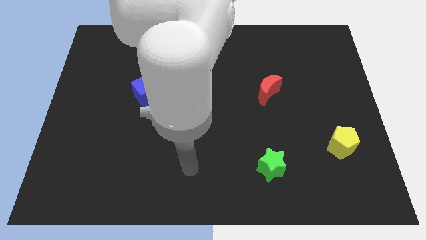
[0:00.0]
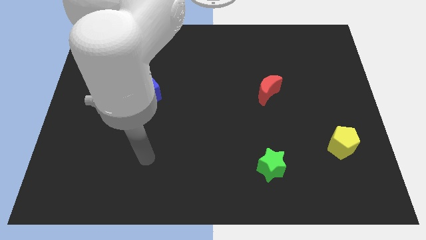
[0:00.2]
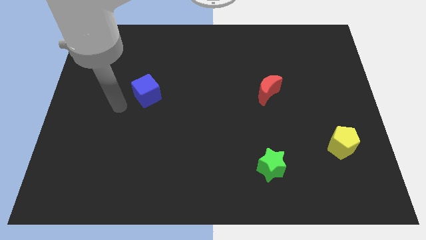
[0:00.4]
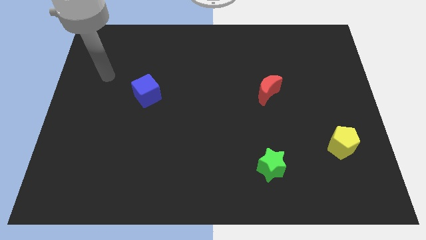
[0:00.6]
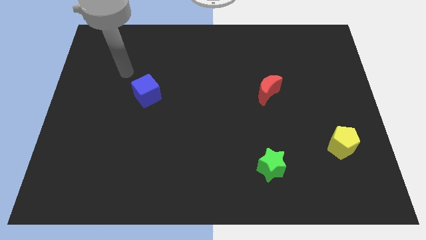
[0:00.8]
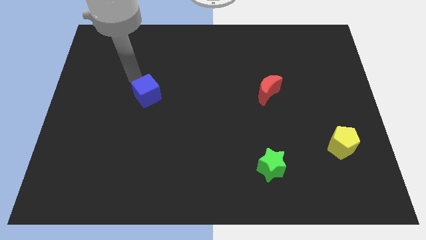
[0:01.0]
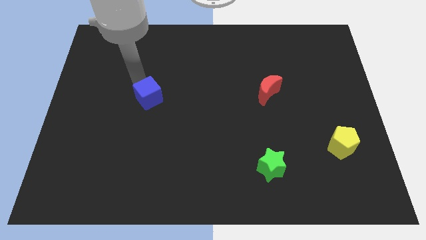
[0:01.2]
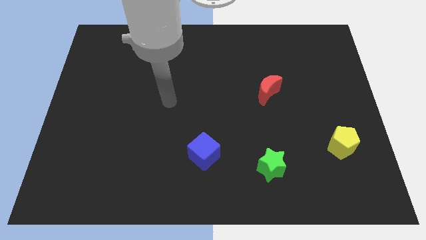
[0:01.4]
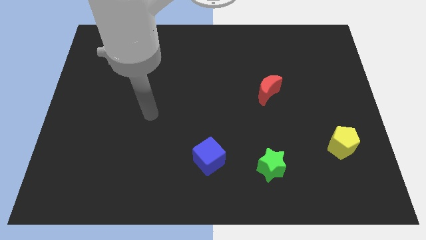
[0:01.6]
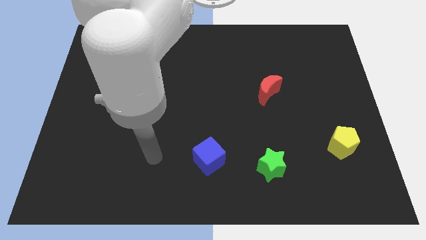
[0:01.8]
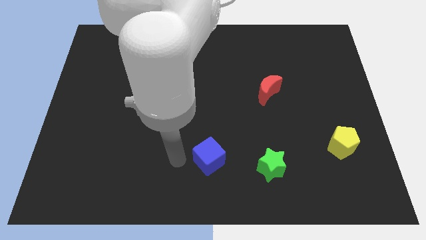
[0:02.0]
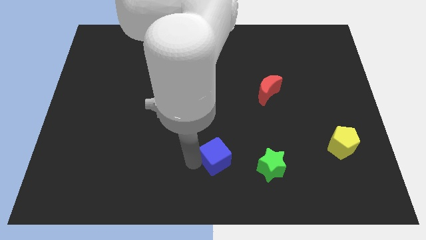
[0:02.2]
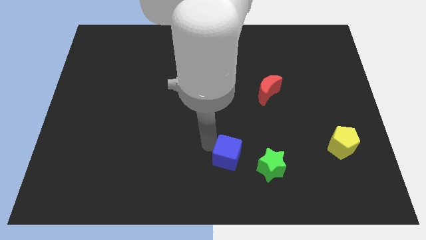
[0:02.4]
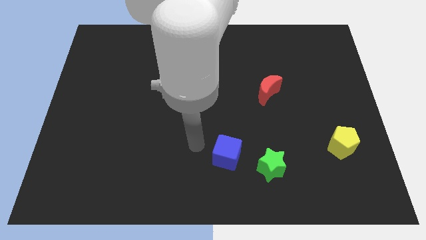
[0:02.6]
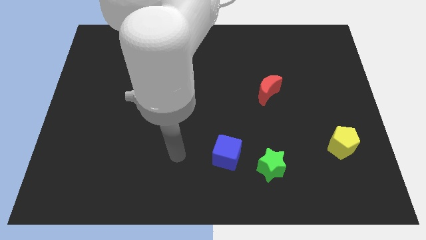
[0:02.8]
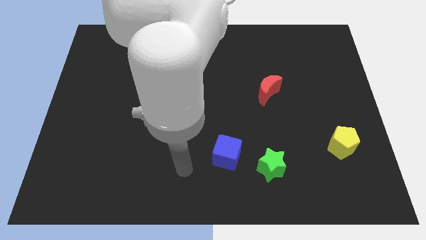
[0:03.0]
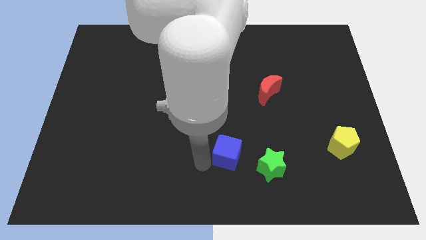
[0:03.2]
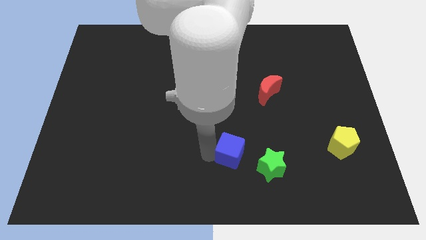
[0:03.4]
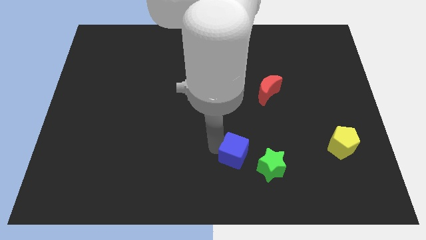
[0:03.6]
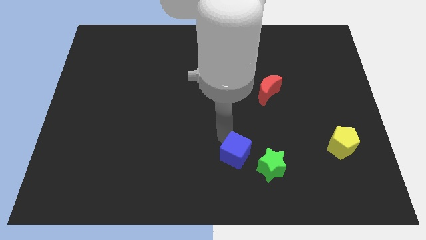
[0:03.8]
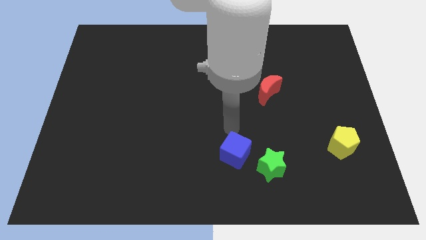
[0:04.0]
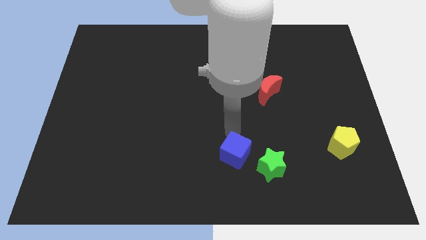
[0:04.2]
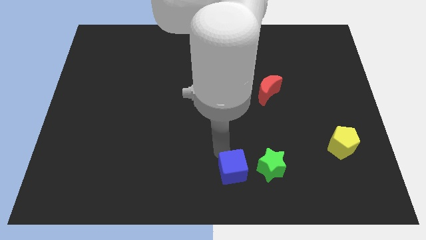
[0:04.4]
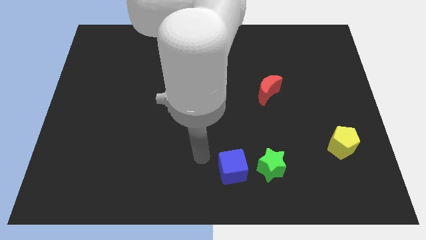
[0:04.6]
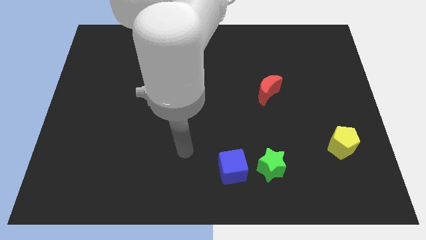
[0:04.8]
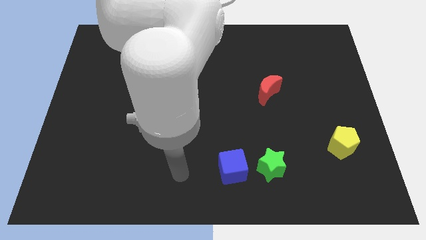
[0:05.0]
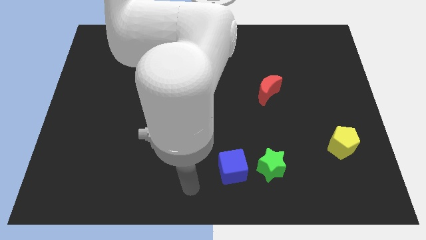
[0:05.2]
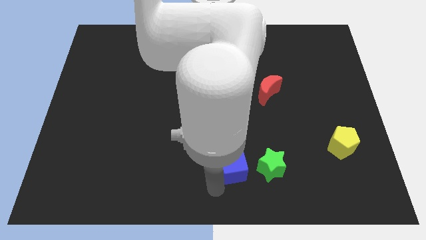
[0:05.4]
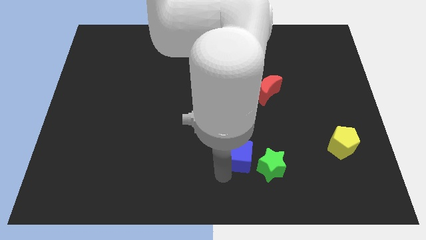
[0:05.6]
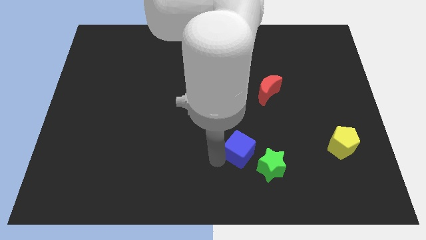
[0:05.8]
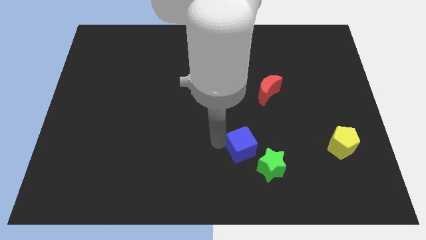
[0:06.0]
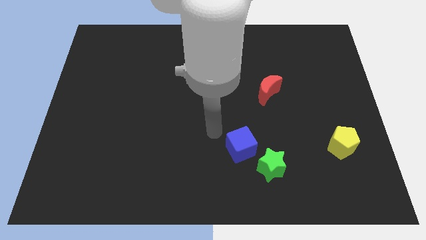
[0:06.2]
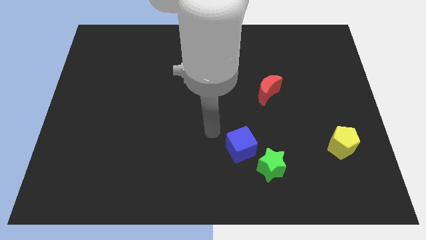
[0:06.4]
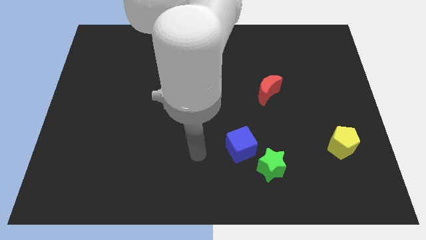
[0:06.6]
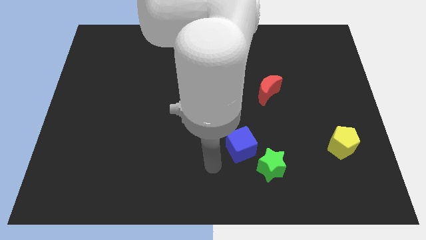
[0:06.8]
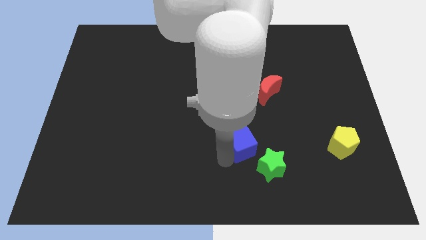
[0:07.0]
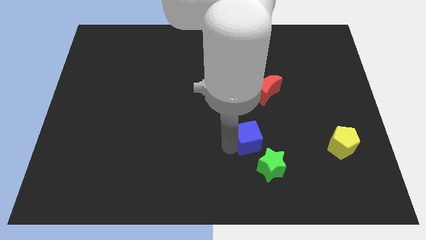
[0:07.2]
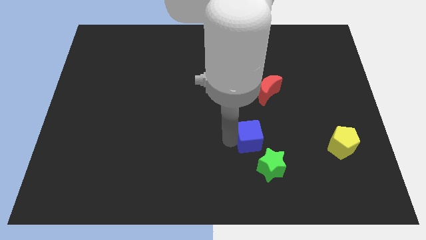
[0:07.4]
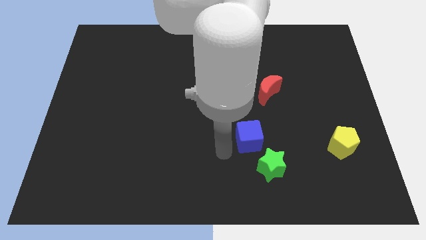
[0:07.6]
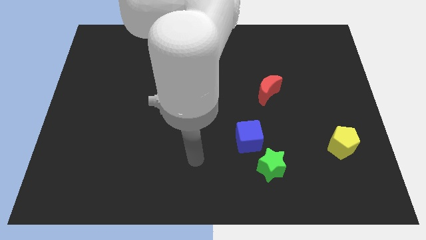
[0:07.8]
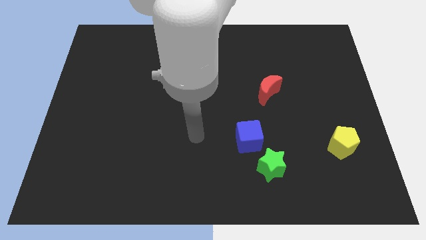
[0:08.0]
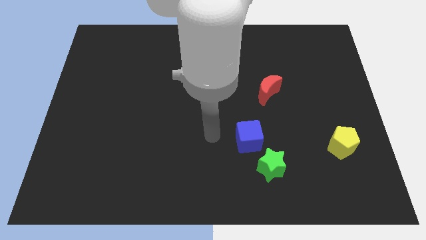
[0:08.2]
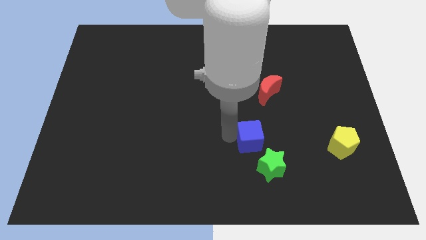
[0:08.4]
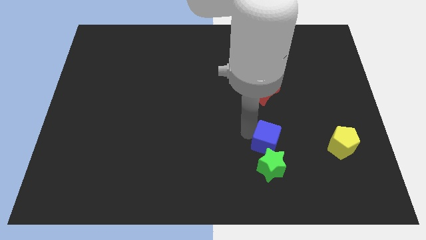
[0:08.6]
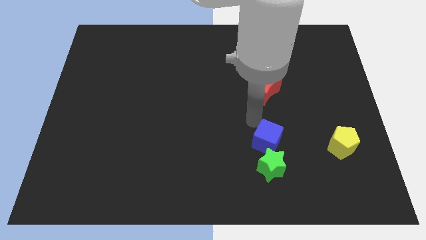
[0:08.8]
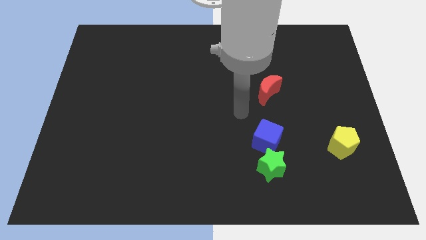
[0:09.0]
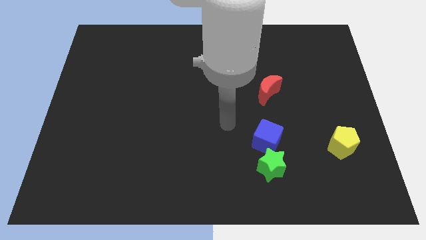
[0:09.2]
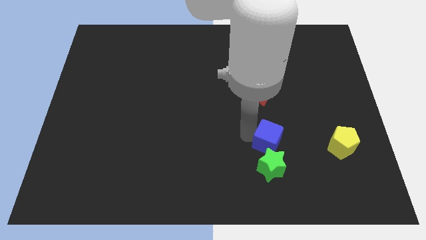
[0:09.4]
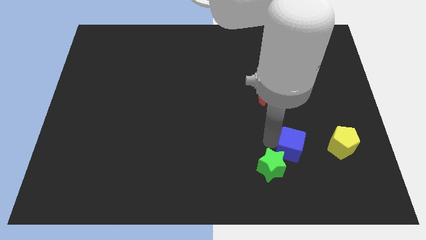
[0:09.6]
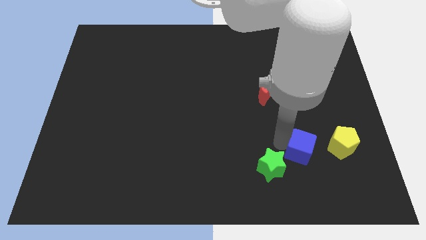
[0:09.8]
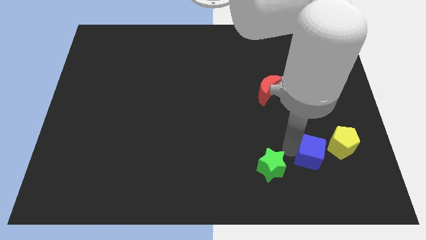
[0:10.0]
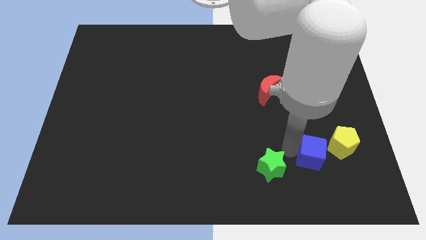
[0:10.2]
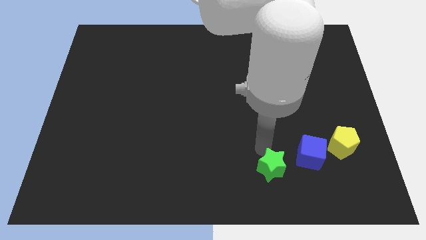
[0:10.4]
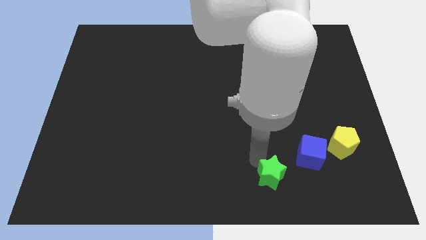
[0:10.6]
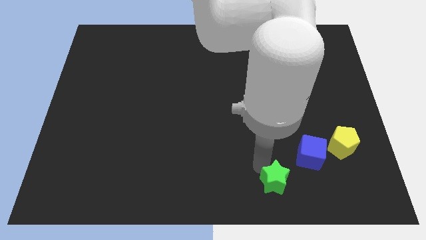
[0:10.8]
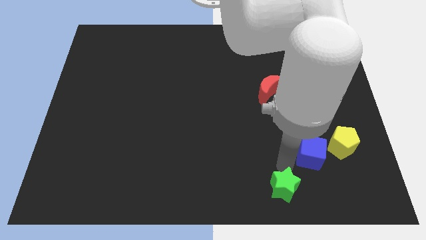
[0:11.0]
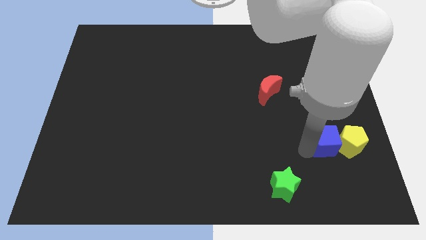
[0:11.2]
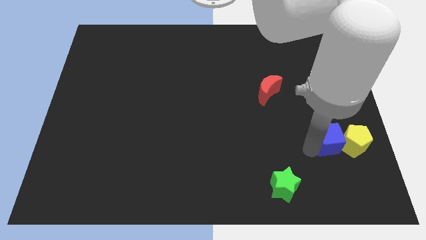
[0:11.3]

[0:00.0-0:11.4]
push the blue cube towards the yellow pentagon

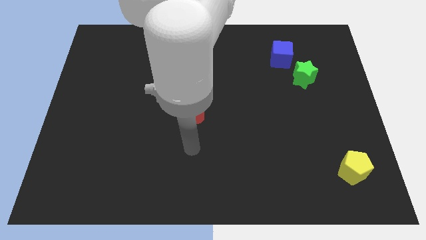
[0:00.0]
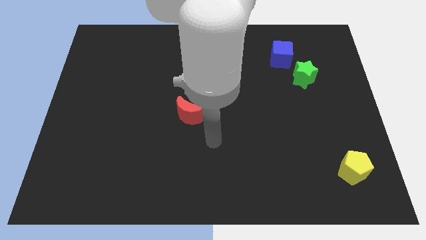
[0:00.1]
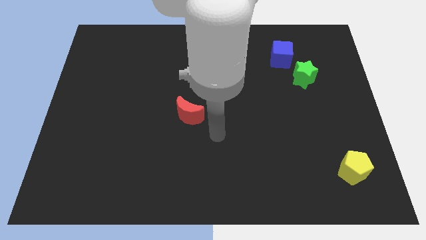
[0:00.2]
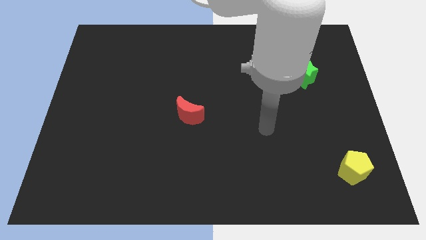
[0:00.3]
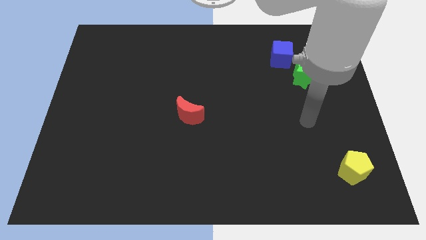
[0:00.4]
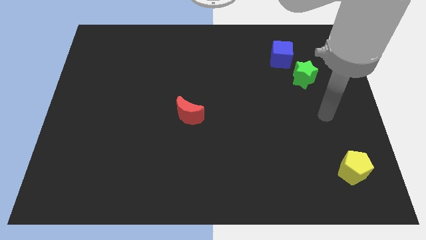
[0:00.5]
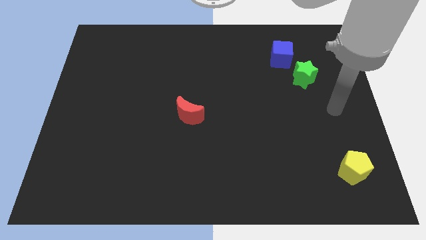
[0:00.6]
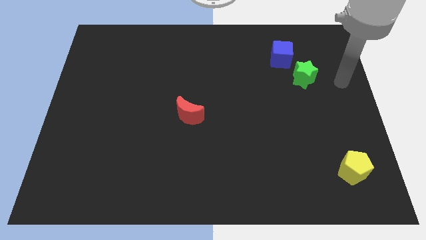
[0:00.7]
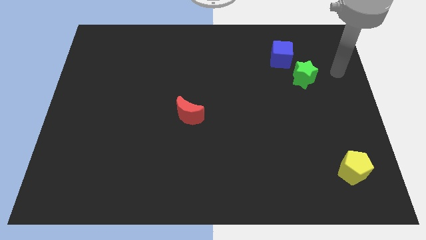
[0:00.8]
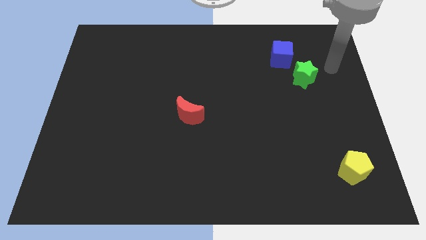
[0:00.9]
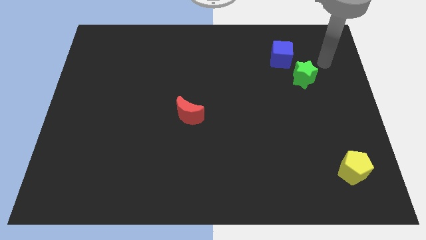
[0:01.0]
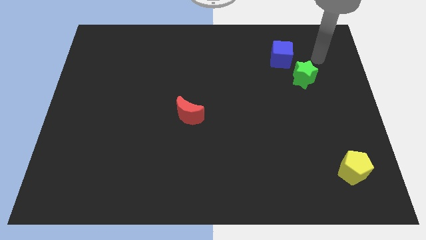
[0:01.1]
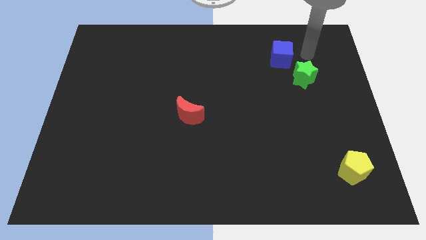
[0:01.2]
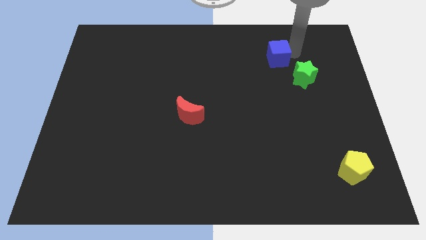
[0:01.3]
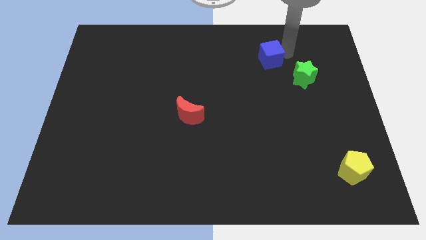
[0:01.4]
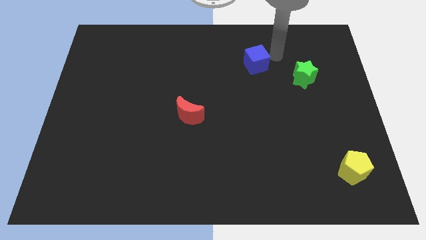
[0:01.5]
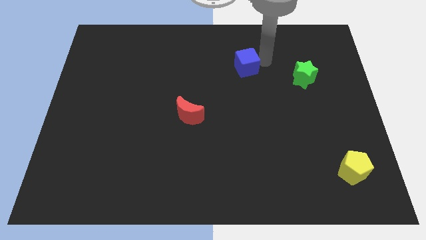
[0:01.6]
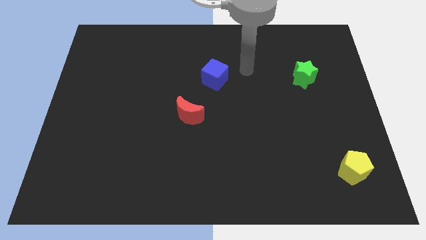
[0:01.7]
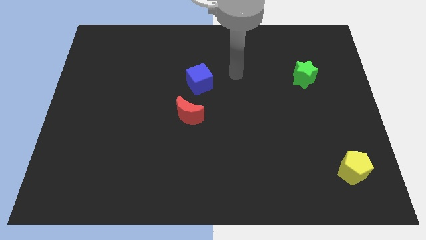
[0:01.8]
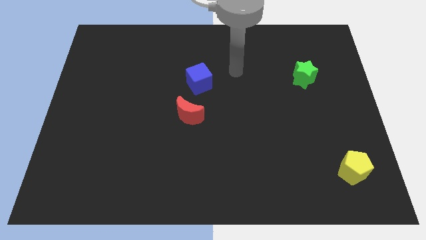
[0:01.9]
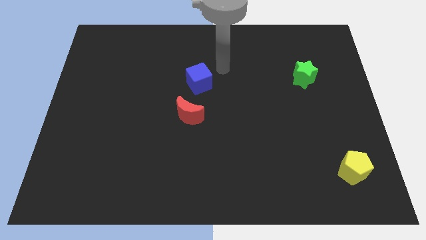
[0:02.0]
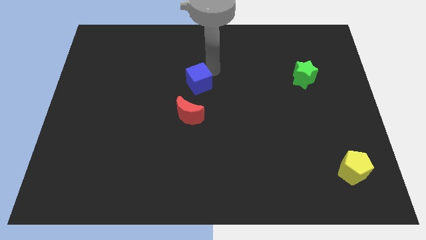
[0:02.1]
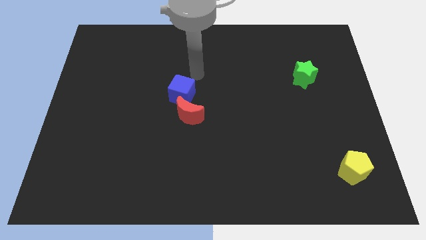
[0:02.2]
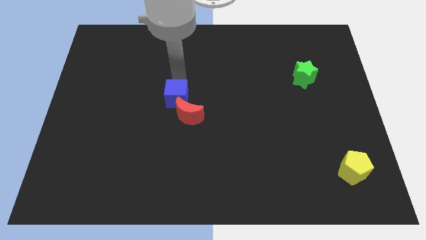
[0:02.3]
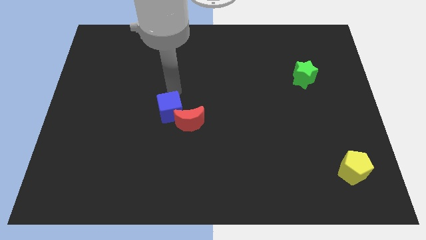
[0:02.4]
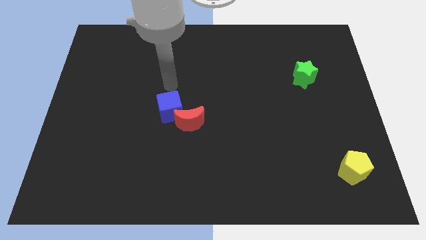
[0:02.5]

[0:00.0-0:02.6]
slide the cube next to the red block

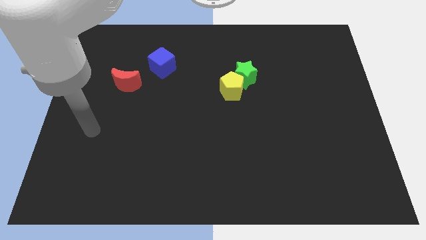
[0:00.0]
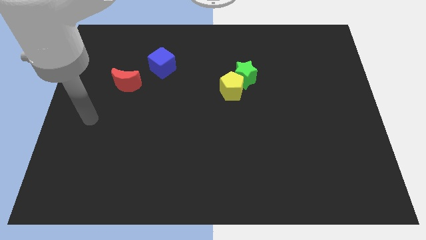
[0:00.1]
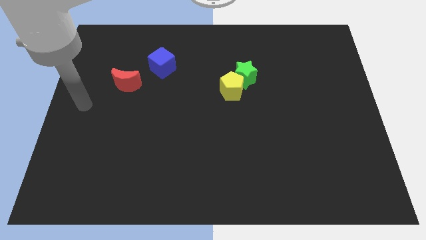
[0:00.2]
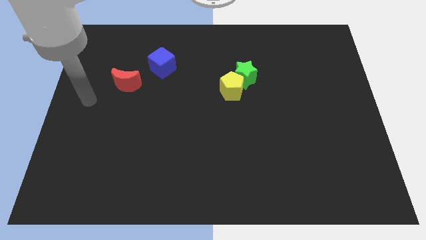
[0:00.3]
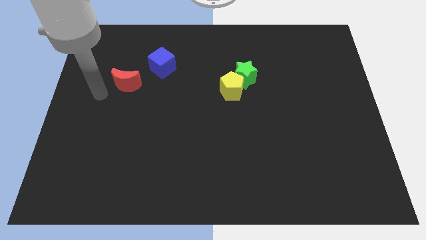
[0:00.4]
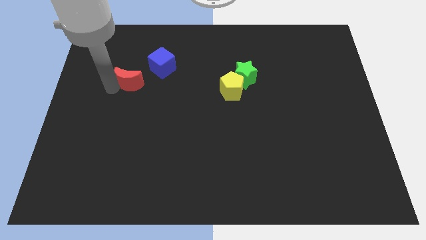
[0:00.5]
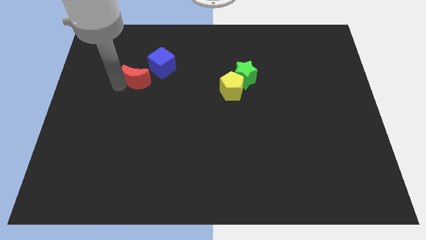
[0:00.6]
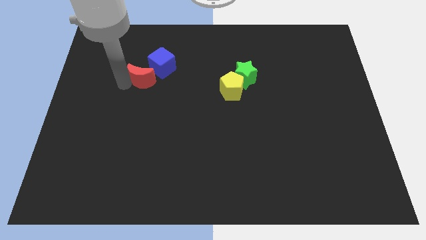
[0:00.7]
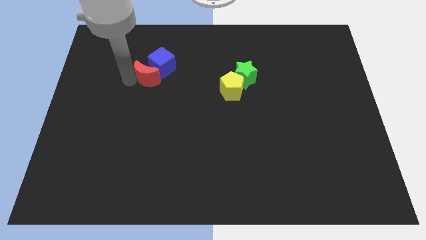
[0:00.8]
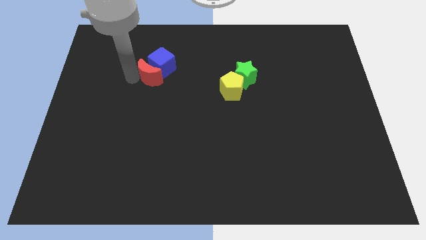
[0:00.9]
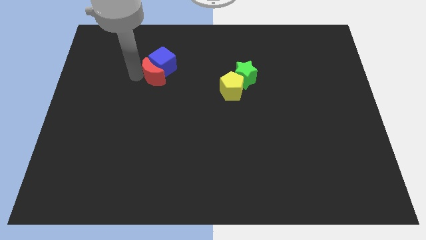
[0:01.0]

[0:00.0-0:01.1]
move the red block close to the blue cube
